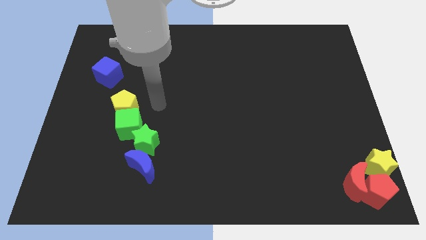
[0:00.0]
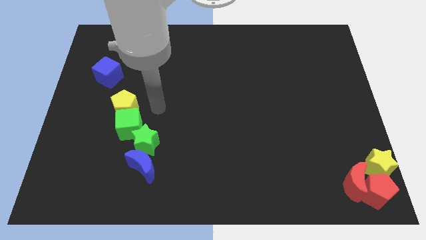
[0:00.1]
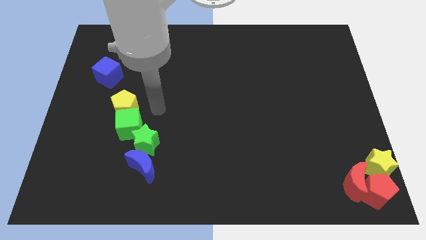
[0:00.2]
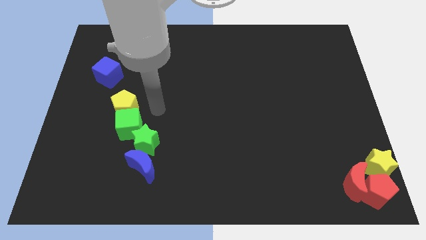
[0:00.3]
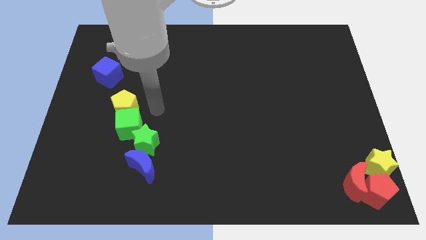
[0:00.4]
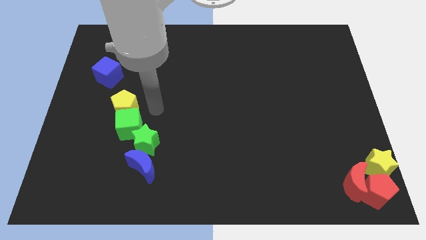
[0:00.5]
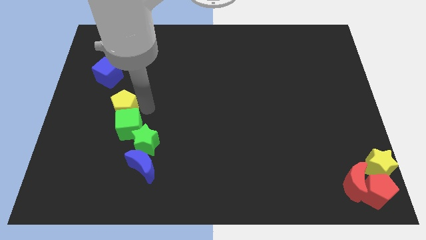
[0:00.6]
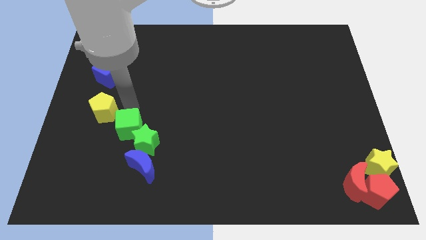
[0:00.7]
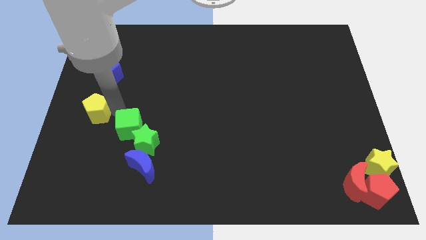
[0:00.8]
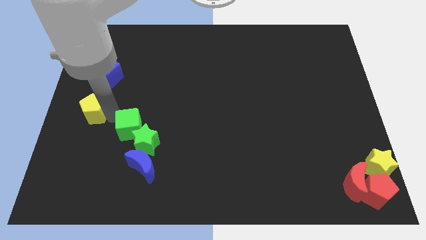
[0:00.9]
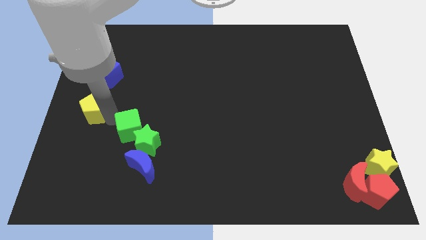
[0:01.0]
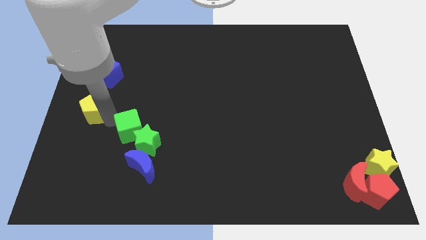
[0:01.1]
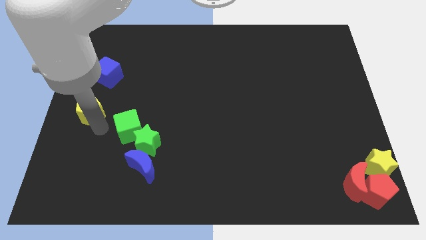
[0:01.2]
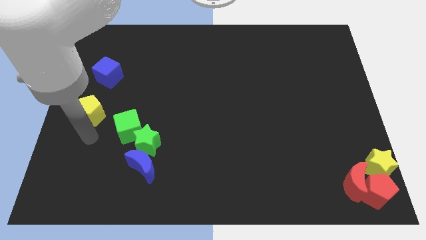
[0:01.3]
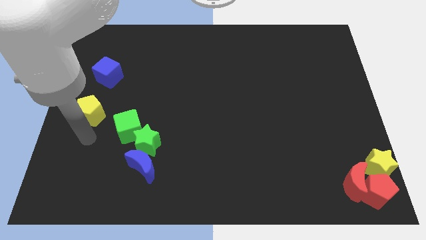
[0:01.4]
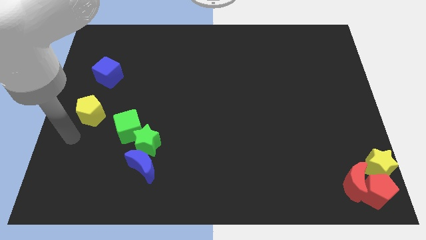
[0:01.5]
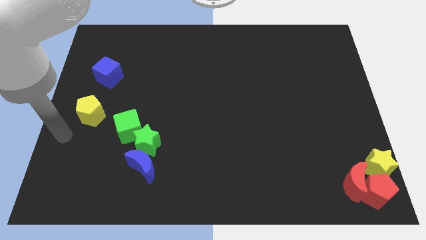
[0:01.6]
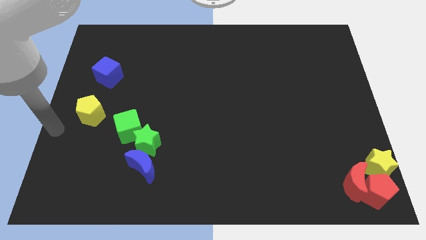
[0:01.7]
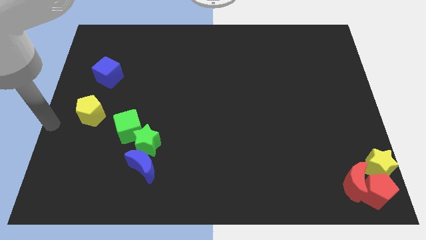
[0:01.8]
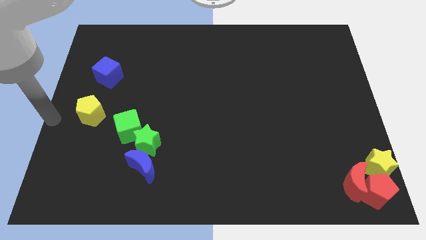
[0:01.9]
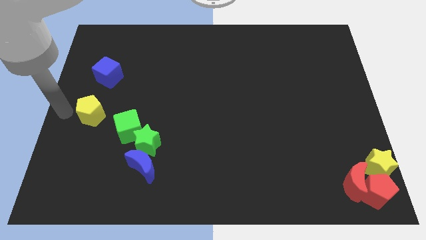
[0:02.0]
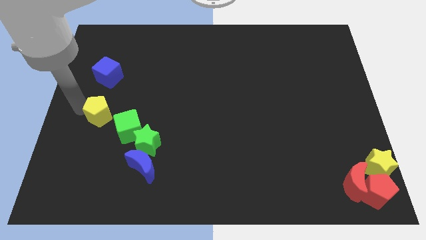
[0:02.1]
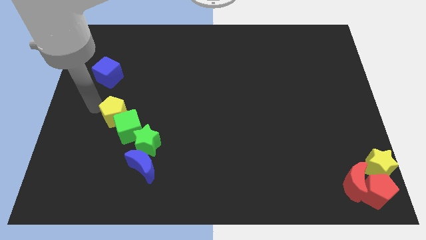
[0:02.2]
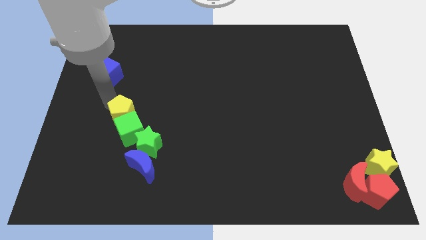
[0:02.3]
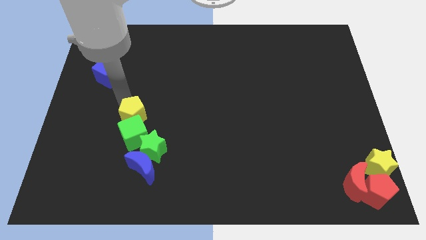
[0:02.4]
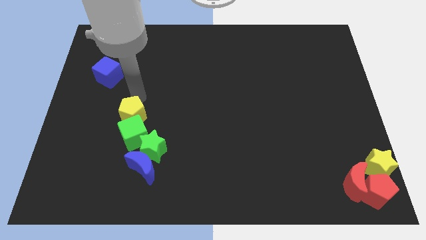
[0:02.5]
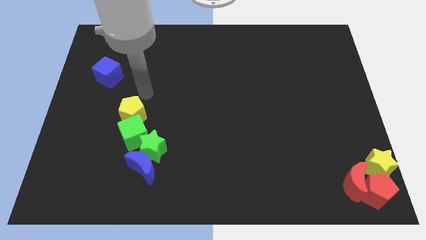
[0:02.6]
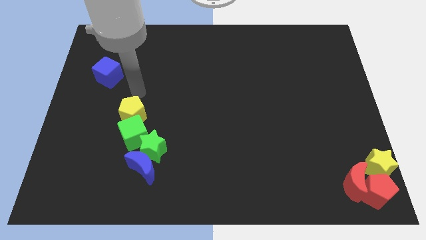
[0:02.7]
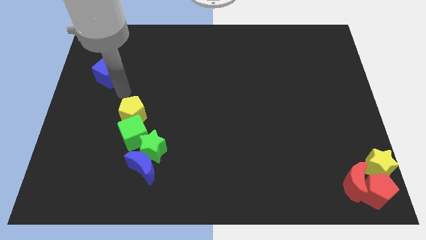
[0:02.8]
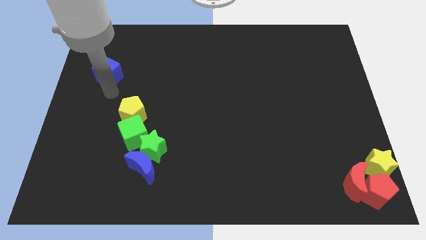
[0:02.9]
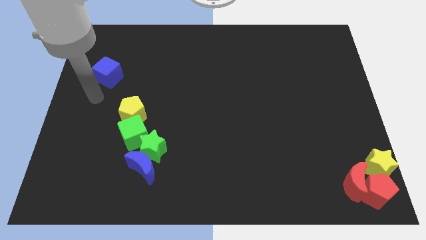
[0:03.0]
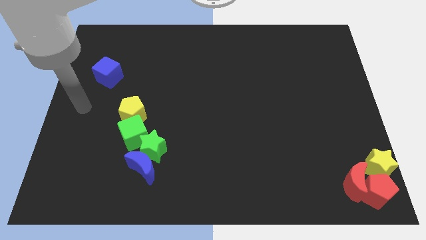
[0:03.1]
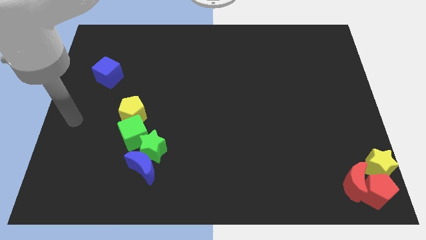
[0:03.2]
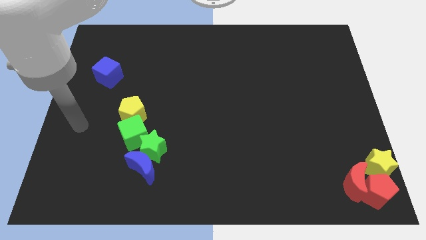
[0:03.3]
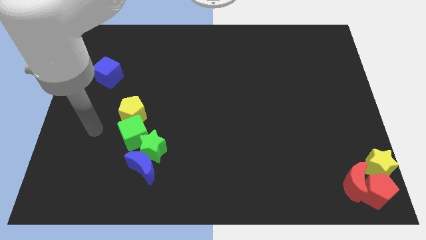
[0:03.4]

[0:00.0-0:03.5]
slide the yellow pentagon towards the center of the board

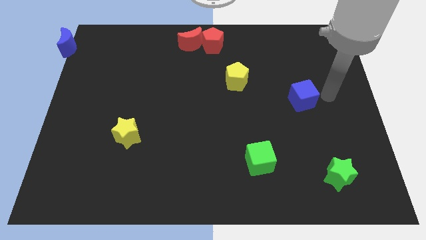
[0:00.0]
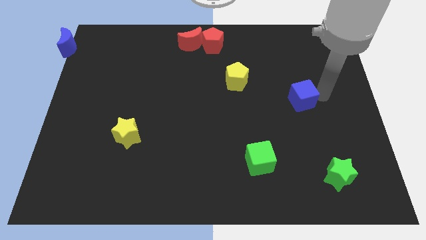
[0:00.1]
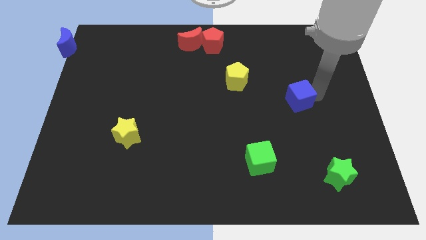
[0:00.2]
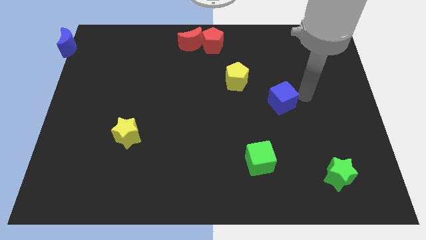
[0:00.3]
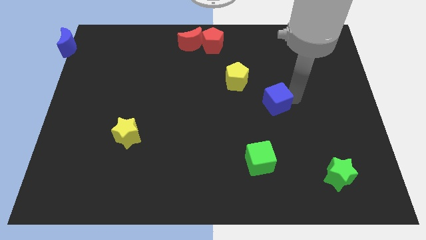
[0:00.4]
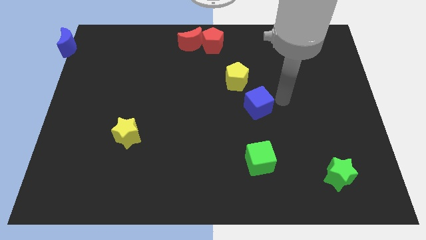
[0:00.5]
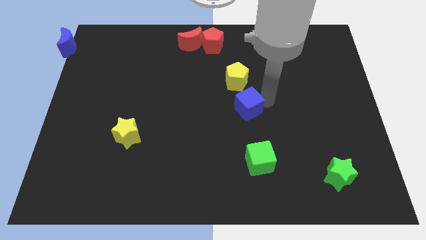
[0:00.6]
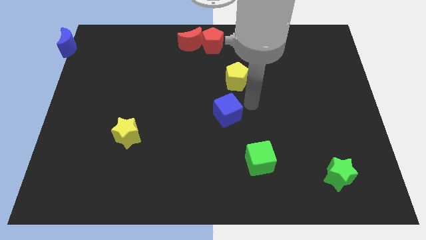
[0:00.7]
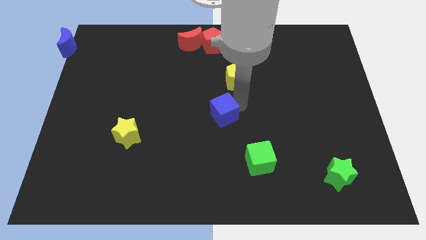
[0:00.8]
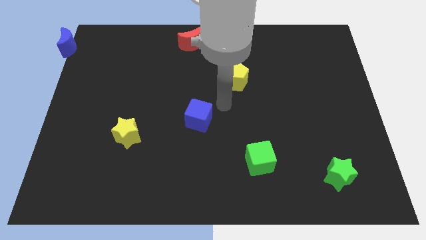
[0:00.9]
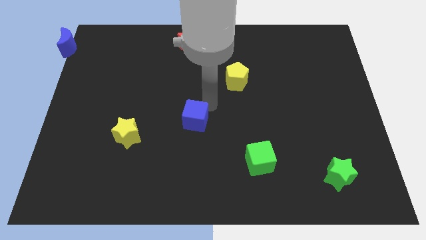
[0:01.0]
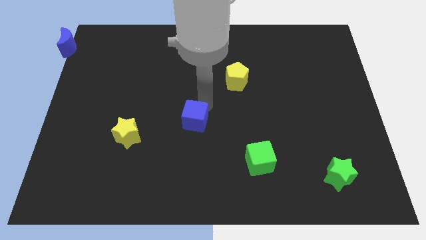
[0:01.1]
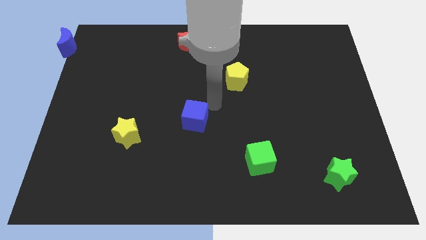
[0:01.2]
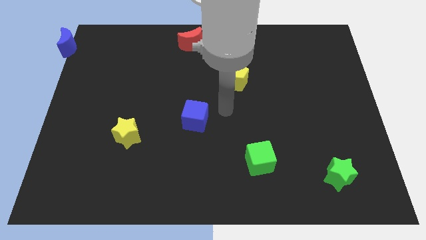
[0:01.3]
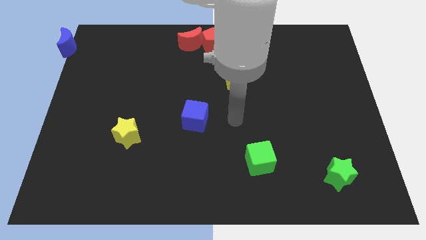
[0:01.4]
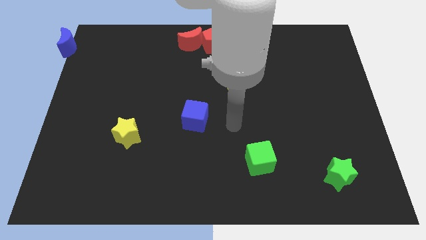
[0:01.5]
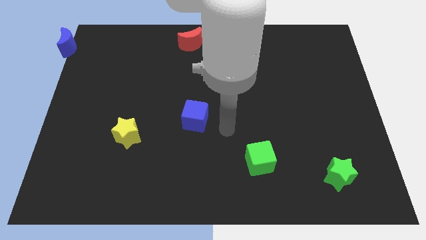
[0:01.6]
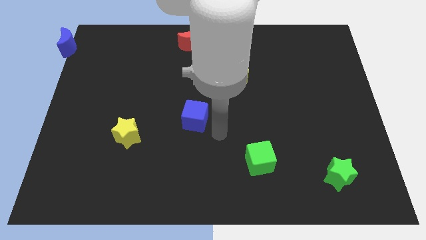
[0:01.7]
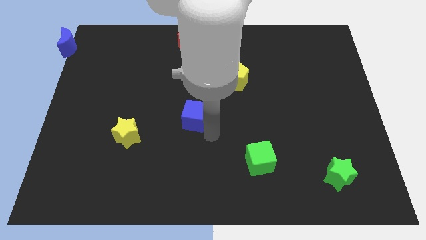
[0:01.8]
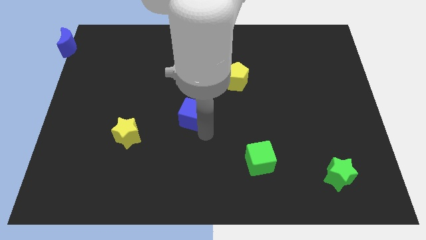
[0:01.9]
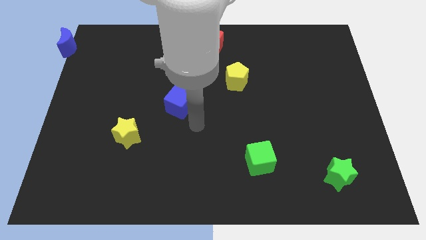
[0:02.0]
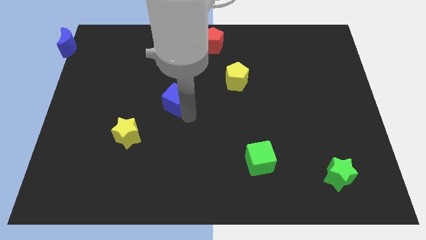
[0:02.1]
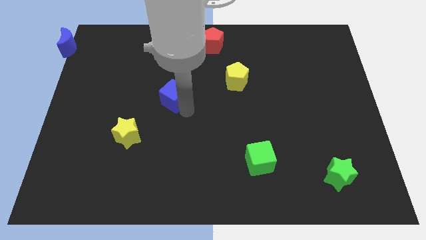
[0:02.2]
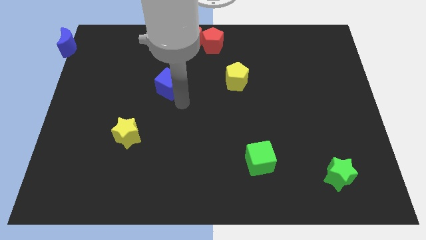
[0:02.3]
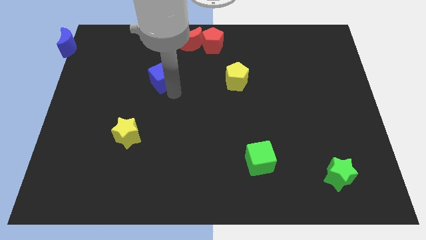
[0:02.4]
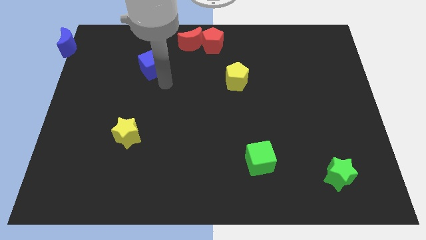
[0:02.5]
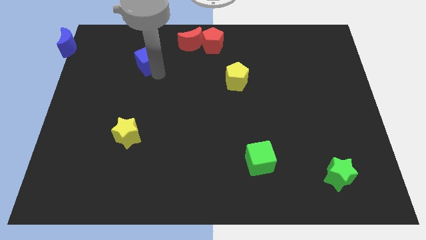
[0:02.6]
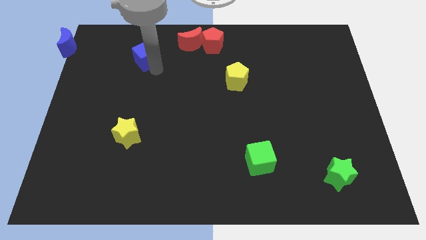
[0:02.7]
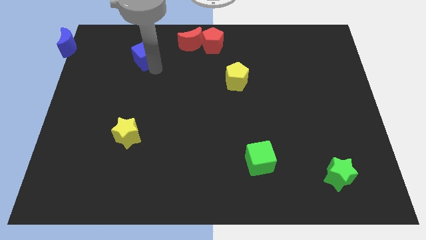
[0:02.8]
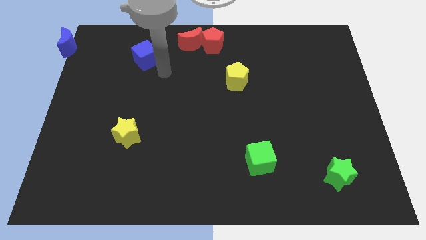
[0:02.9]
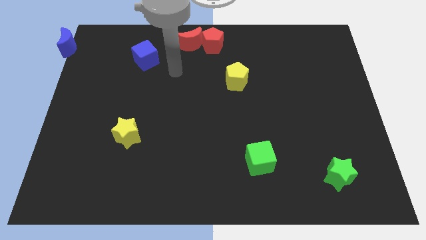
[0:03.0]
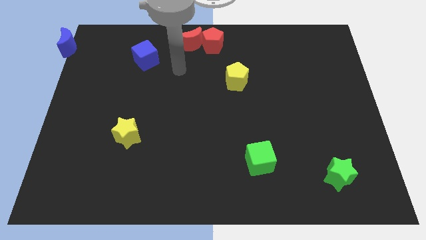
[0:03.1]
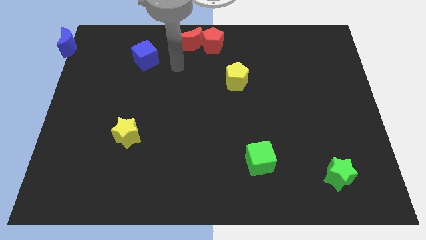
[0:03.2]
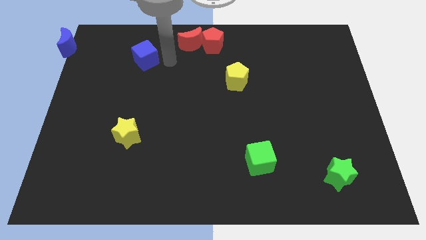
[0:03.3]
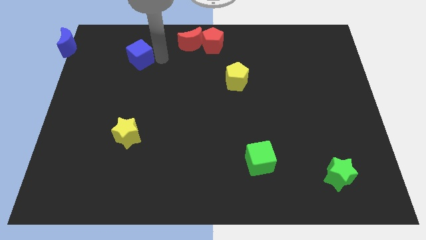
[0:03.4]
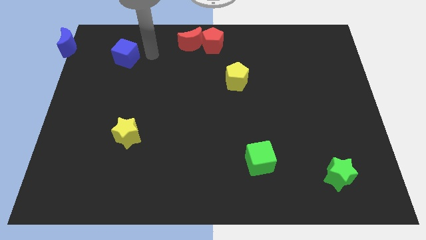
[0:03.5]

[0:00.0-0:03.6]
push the blue cube vertically to the top side of the yellow star

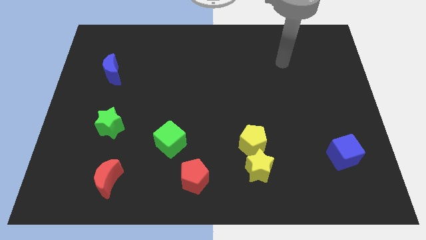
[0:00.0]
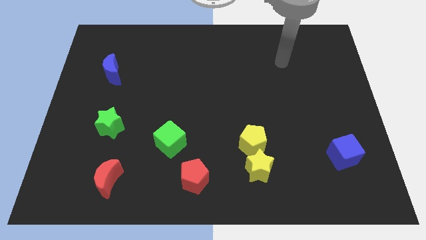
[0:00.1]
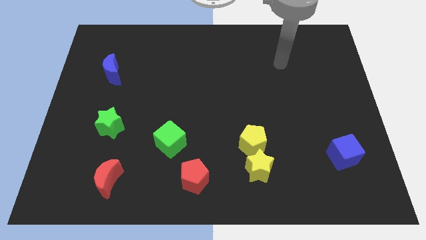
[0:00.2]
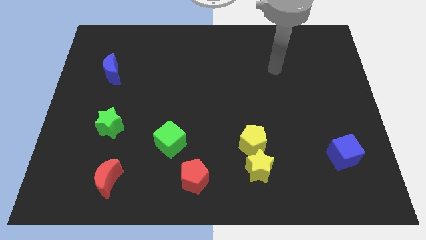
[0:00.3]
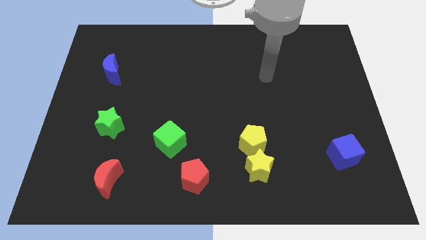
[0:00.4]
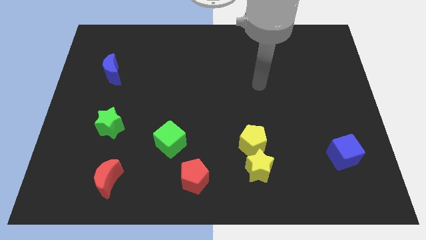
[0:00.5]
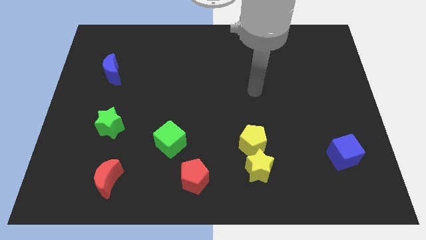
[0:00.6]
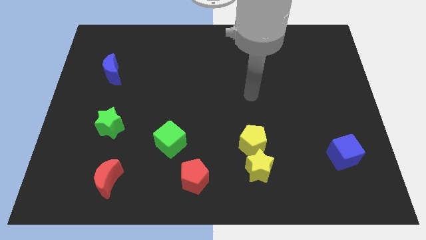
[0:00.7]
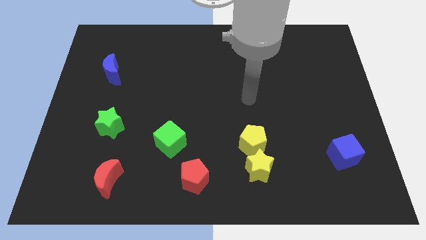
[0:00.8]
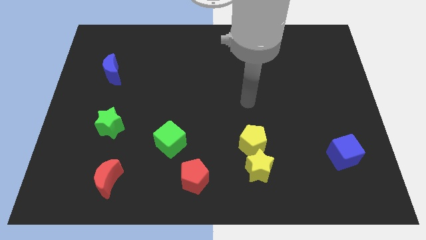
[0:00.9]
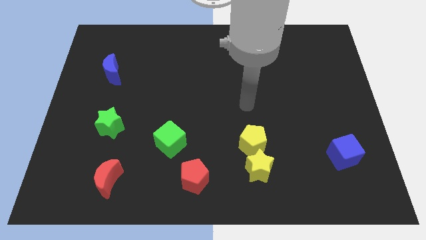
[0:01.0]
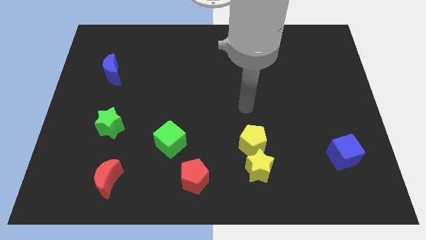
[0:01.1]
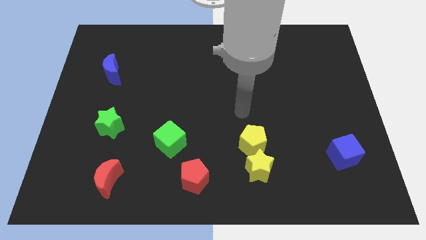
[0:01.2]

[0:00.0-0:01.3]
go to the top side of the yellow pentagon

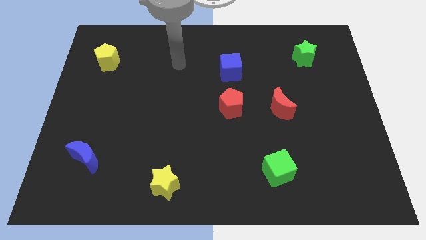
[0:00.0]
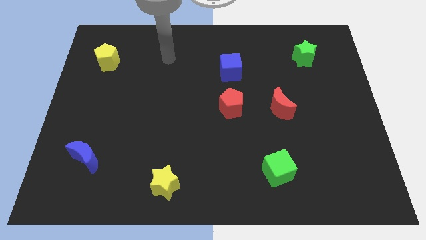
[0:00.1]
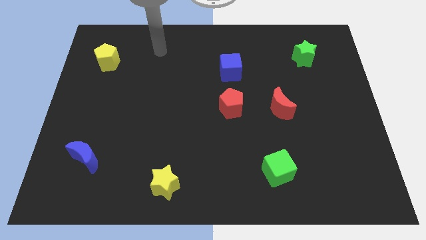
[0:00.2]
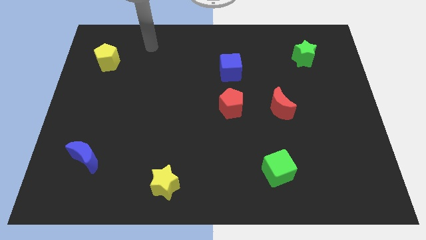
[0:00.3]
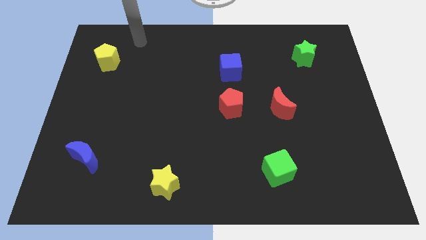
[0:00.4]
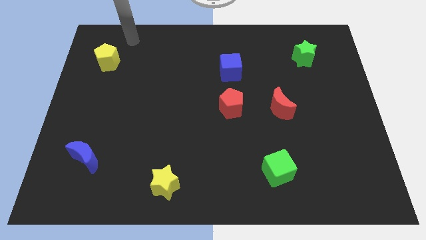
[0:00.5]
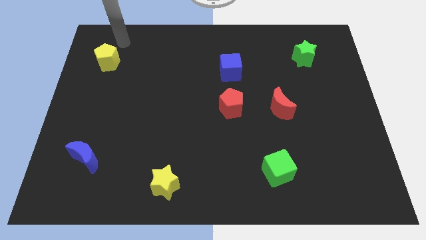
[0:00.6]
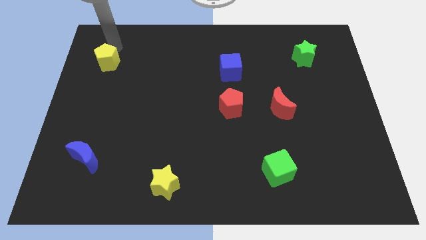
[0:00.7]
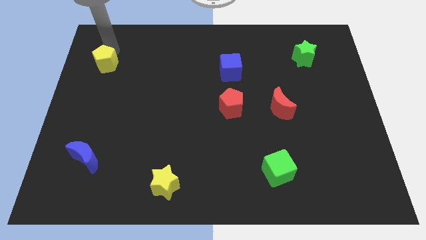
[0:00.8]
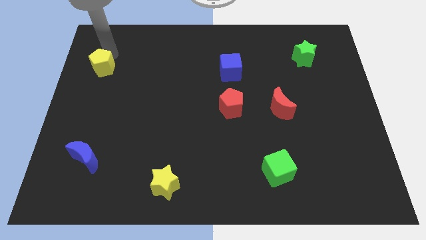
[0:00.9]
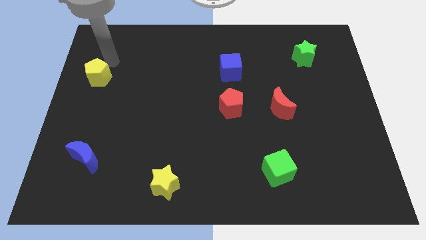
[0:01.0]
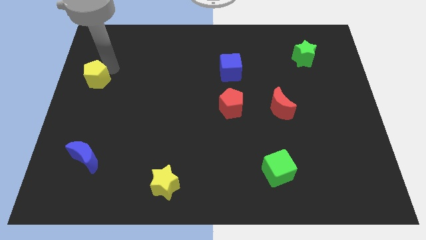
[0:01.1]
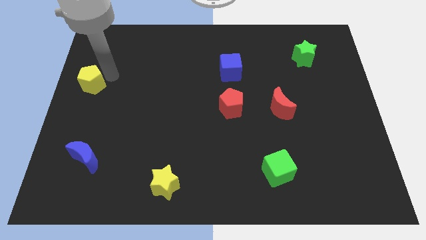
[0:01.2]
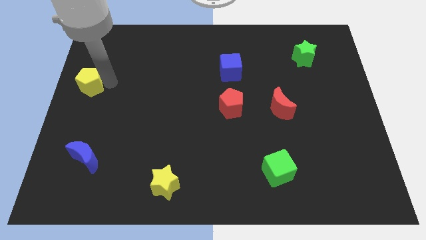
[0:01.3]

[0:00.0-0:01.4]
move yellow pentagon to center left
